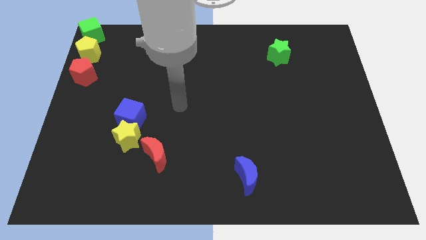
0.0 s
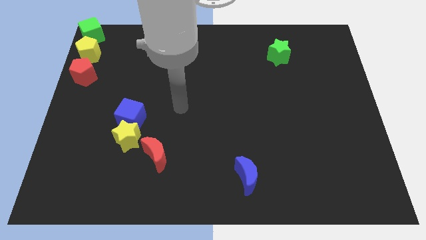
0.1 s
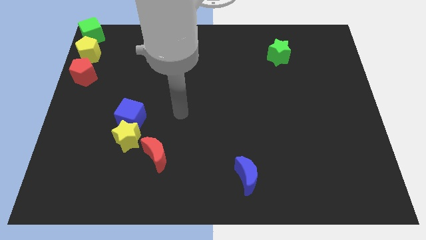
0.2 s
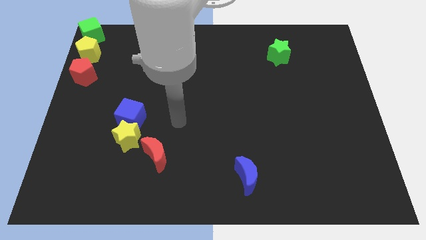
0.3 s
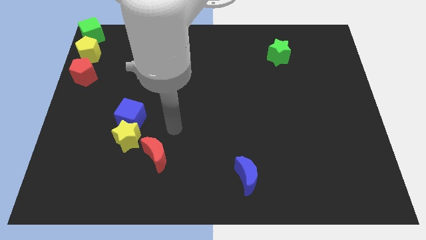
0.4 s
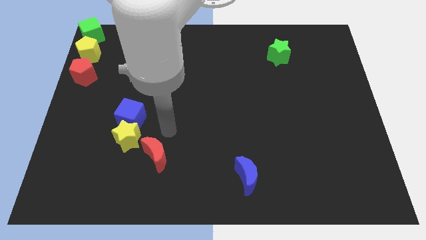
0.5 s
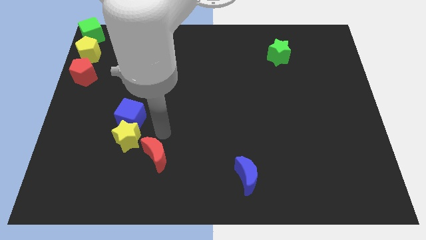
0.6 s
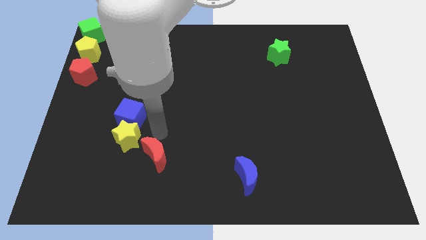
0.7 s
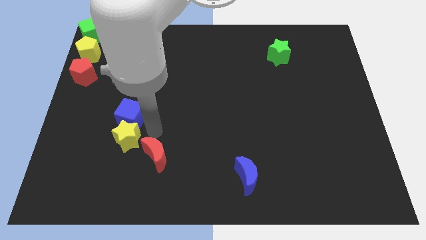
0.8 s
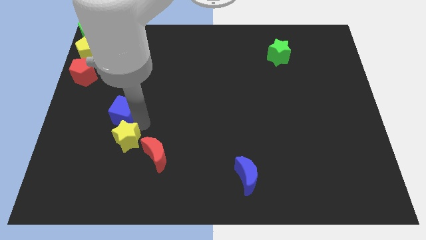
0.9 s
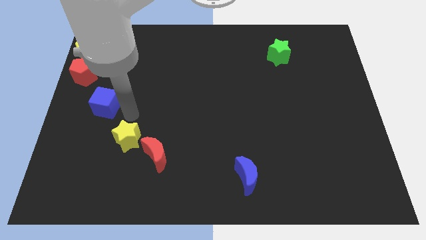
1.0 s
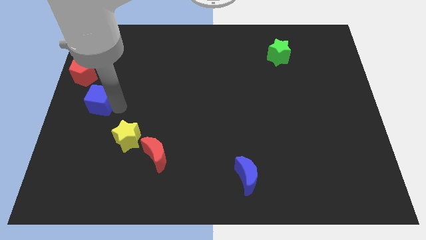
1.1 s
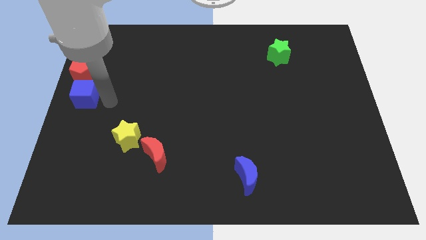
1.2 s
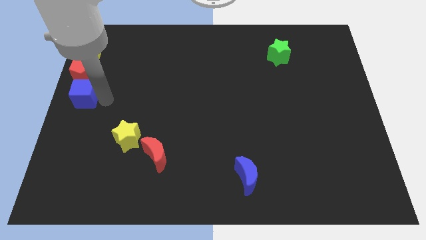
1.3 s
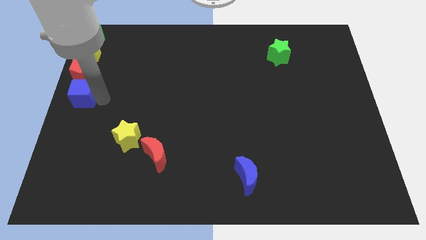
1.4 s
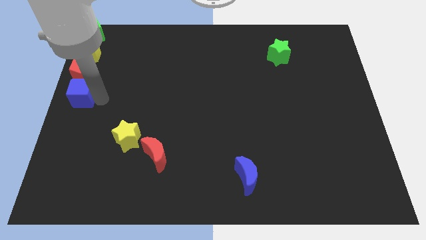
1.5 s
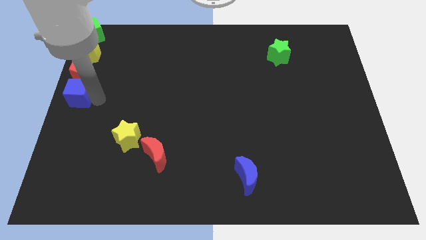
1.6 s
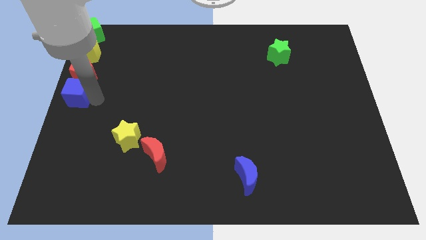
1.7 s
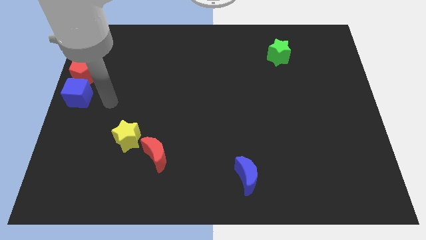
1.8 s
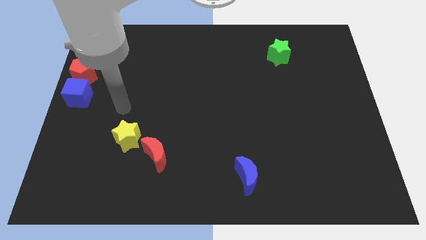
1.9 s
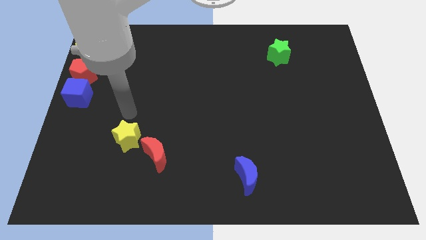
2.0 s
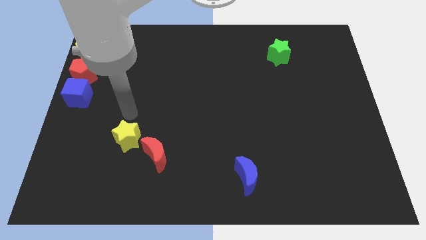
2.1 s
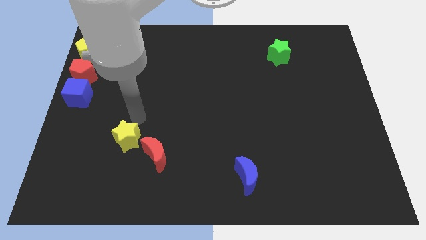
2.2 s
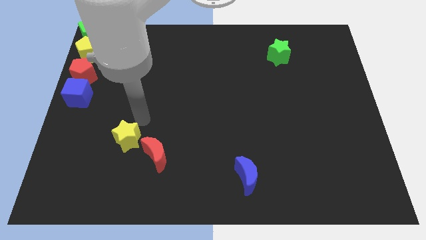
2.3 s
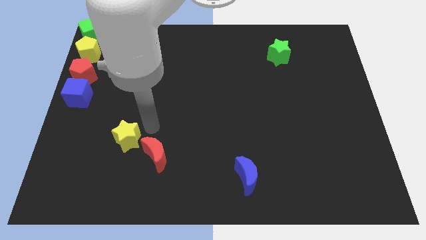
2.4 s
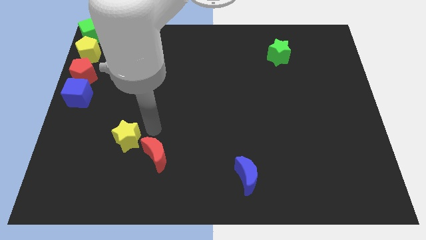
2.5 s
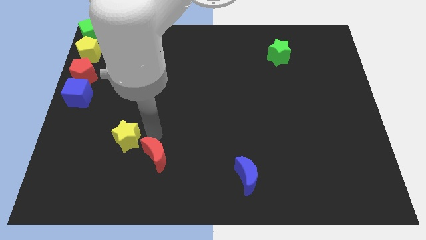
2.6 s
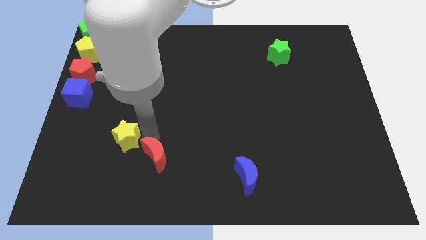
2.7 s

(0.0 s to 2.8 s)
push blue cube below red pentagon

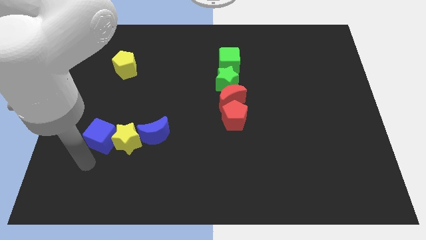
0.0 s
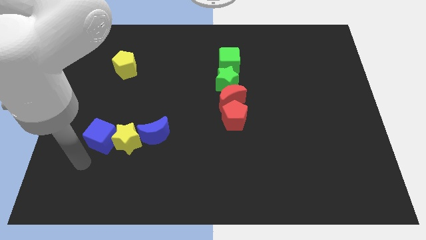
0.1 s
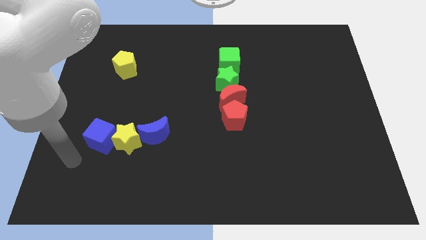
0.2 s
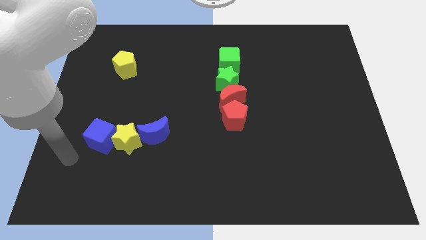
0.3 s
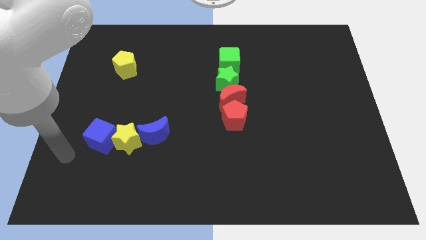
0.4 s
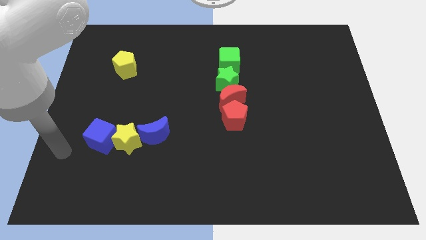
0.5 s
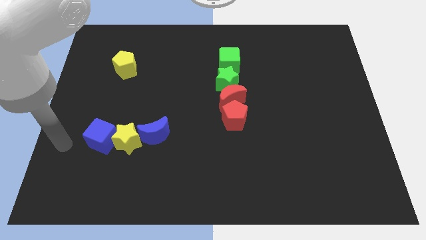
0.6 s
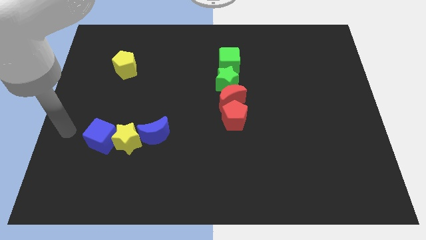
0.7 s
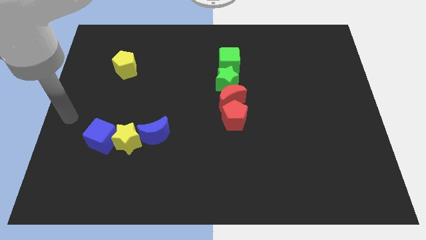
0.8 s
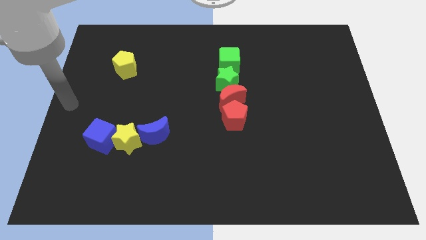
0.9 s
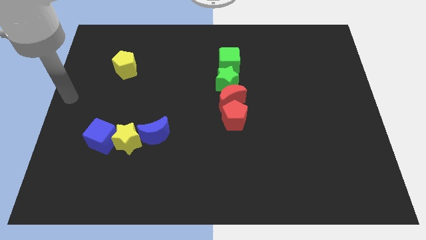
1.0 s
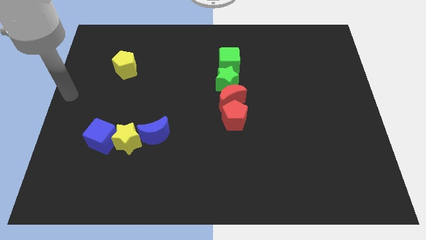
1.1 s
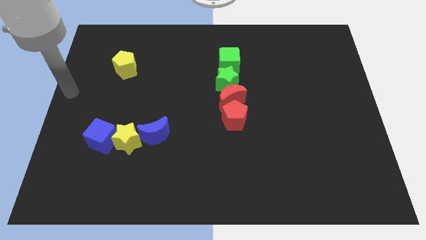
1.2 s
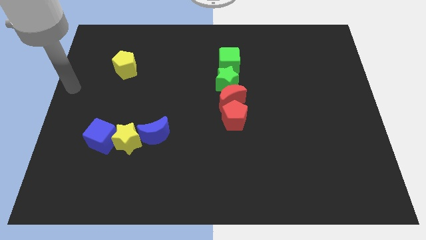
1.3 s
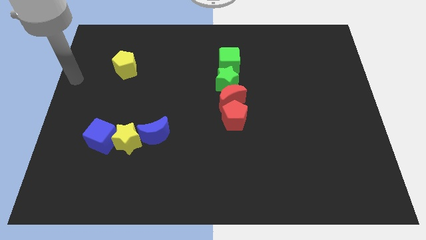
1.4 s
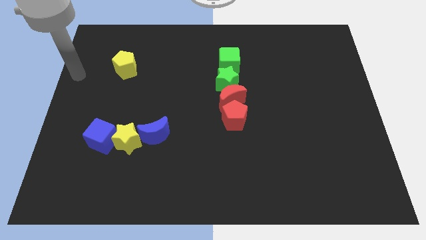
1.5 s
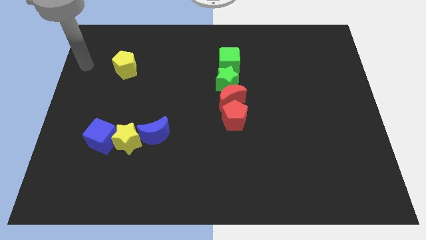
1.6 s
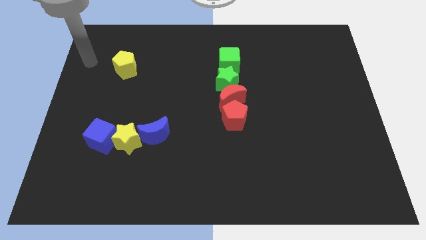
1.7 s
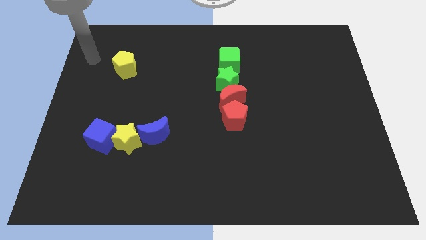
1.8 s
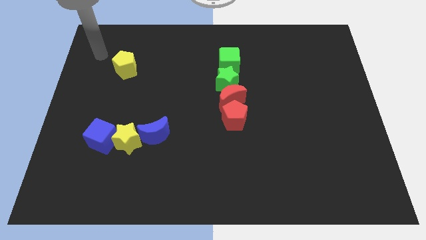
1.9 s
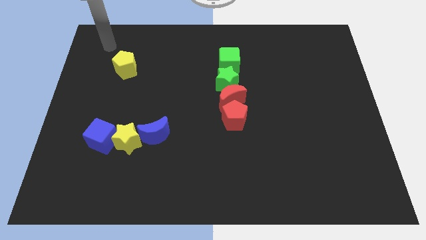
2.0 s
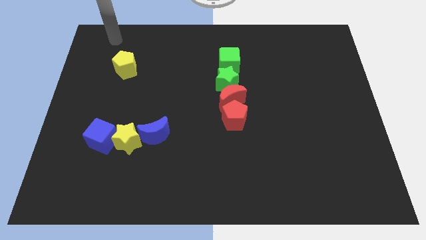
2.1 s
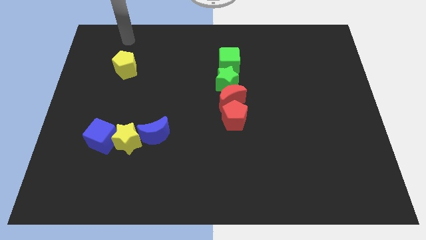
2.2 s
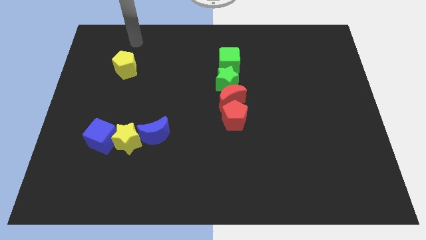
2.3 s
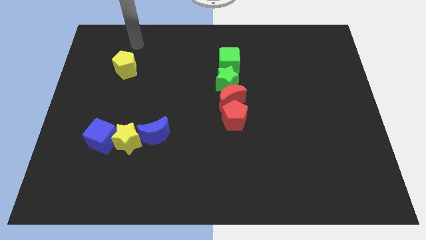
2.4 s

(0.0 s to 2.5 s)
move your hand away from the blue cube

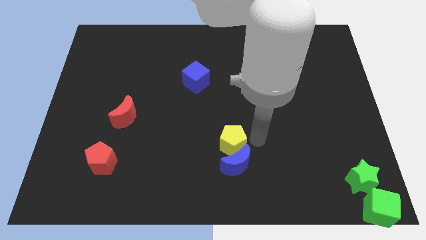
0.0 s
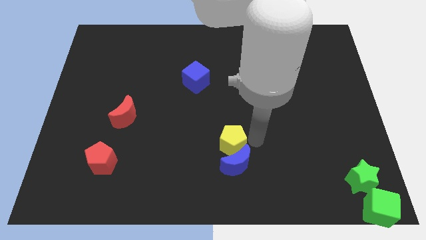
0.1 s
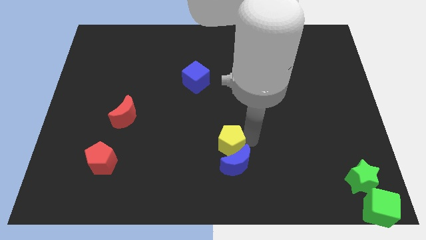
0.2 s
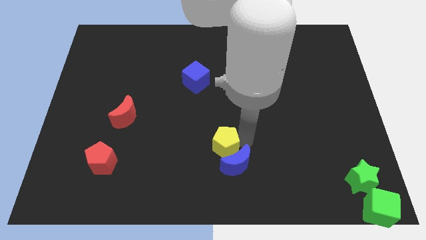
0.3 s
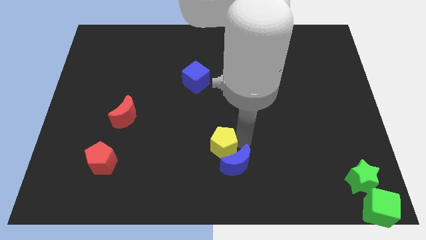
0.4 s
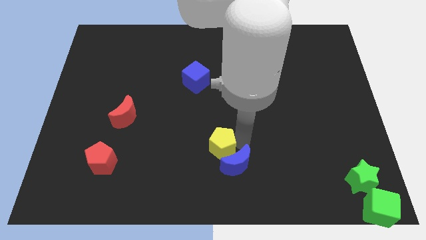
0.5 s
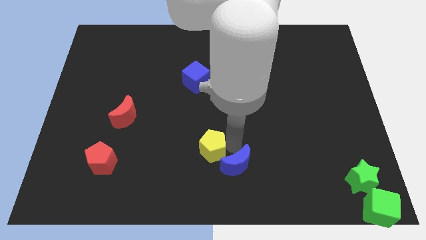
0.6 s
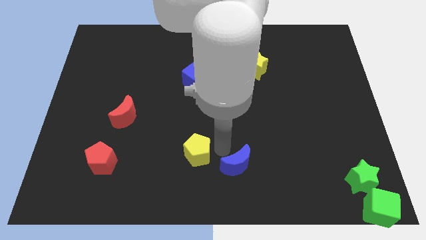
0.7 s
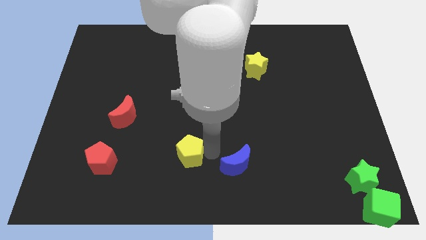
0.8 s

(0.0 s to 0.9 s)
take the yellow pentagon away from the blue crescent

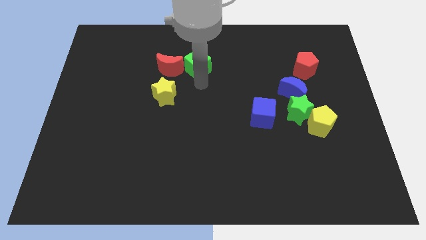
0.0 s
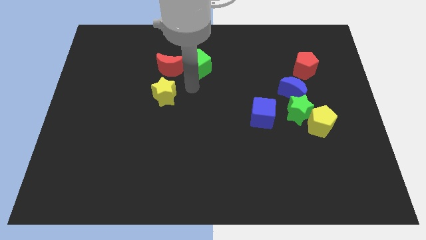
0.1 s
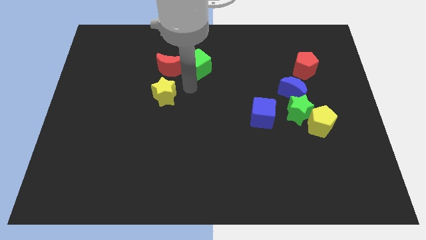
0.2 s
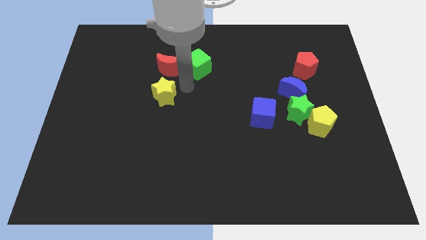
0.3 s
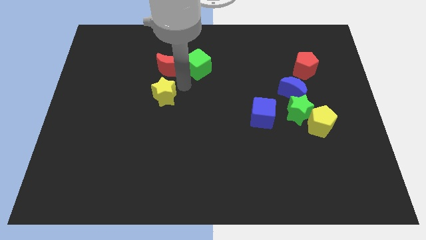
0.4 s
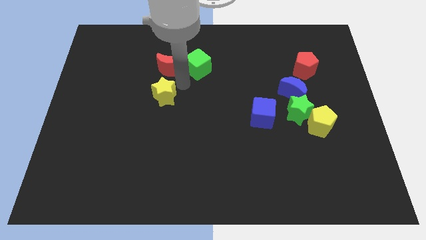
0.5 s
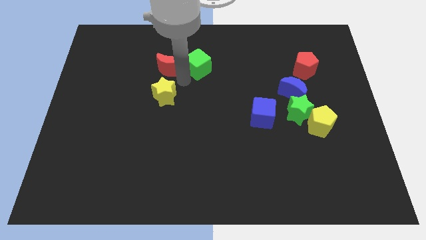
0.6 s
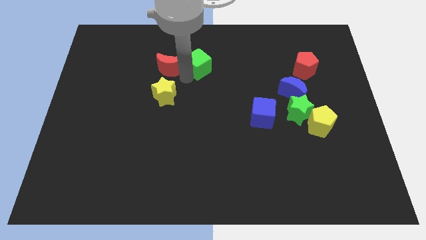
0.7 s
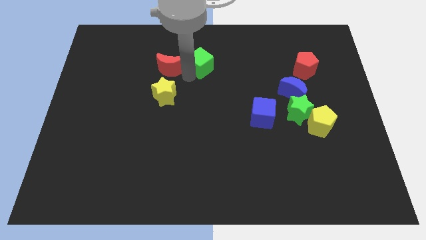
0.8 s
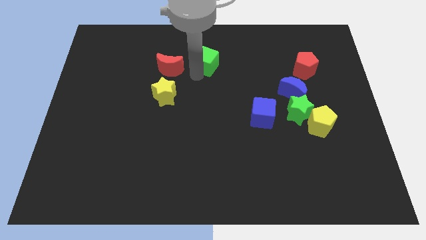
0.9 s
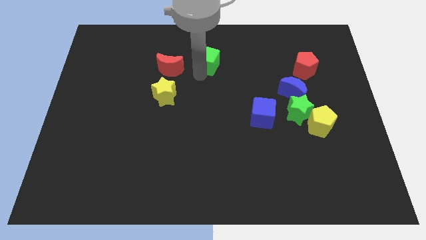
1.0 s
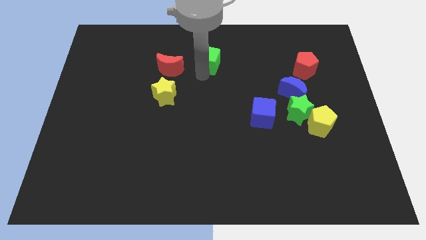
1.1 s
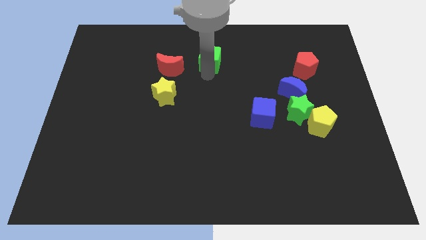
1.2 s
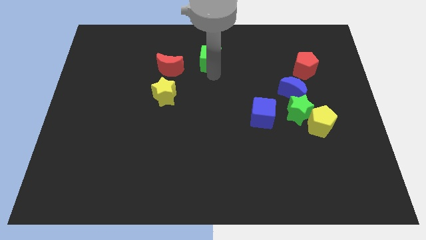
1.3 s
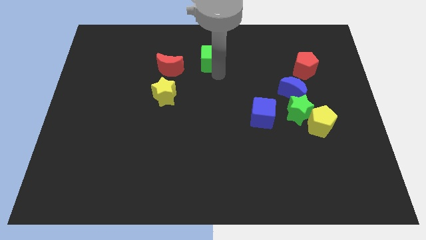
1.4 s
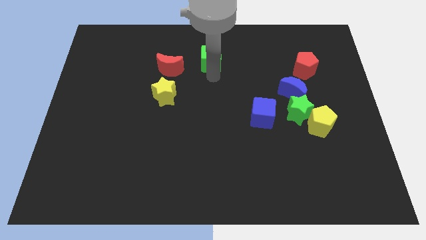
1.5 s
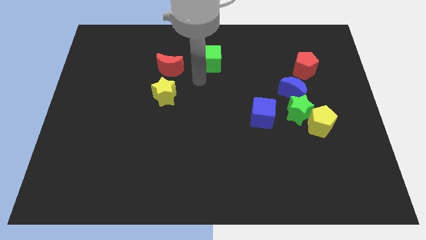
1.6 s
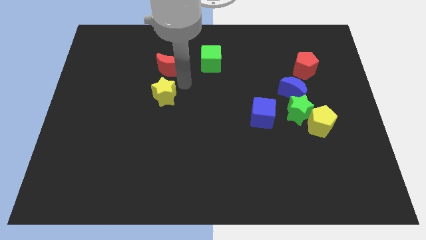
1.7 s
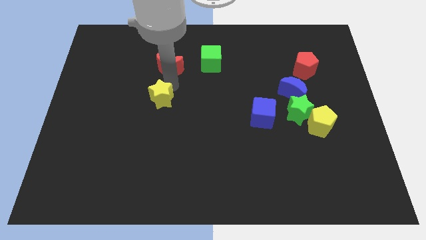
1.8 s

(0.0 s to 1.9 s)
separate the green cube from the red crescent

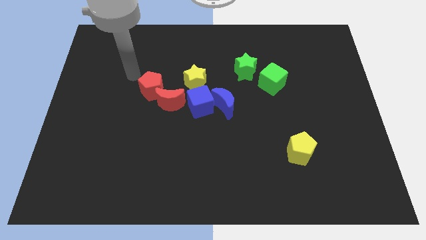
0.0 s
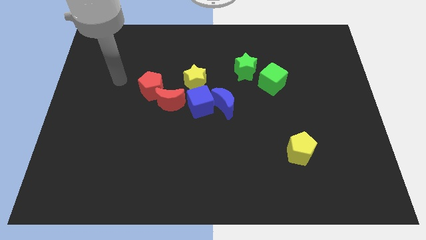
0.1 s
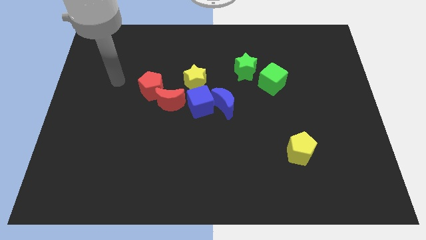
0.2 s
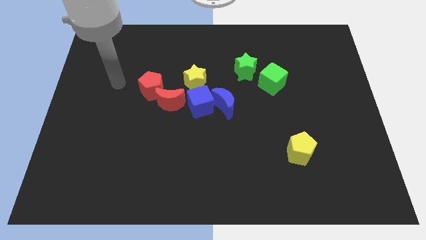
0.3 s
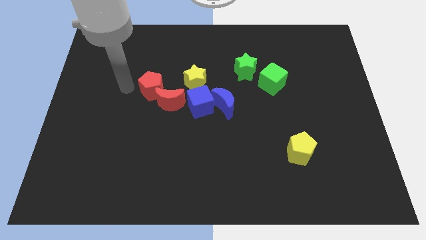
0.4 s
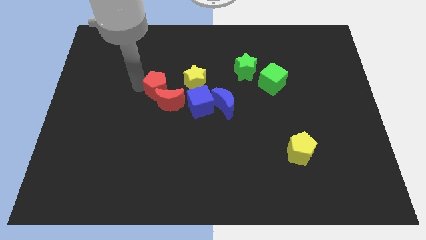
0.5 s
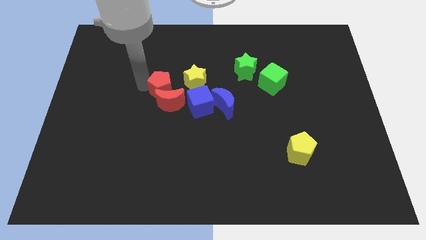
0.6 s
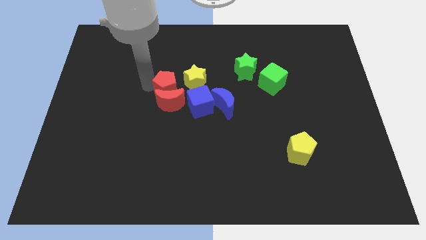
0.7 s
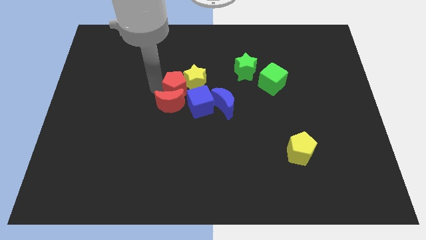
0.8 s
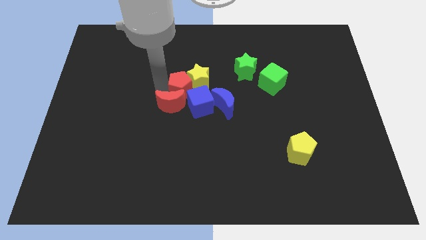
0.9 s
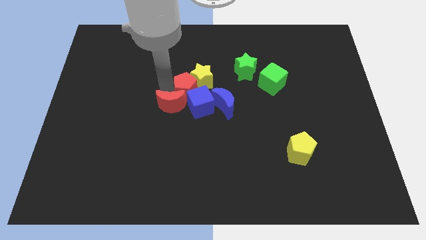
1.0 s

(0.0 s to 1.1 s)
move the red pentagon into the yellow star
